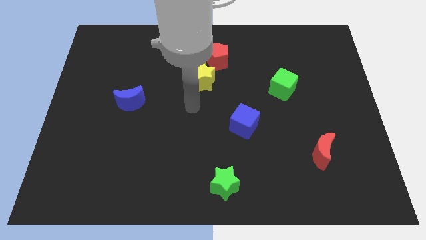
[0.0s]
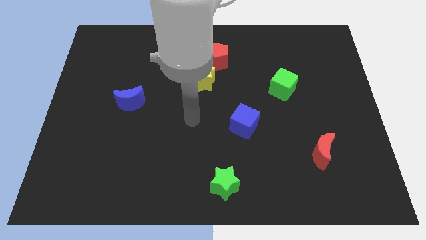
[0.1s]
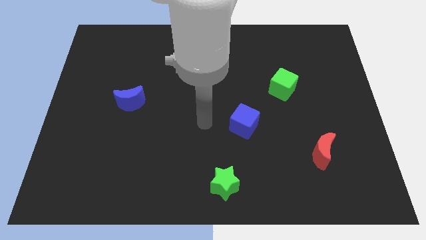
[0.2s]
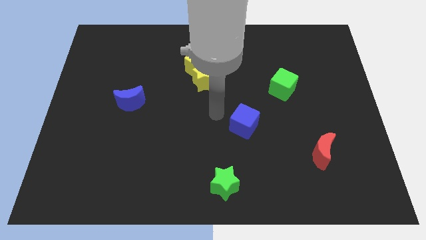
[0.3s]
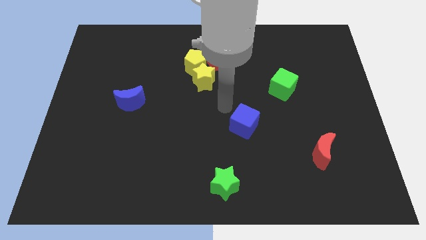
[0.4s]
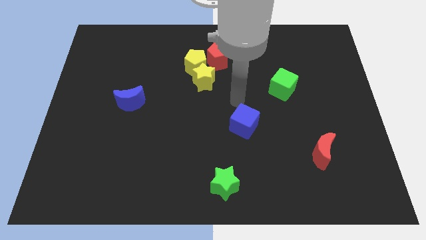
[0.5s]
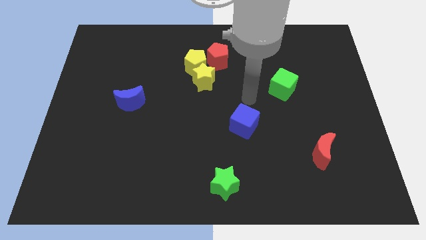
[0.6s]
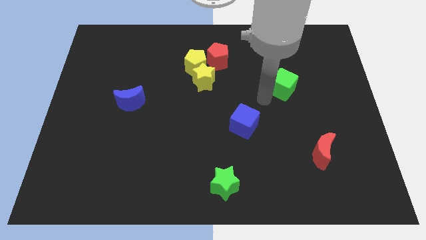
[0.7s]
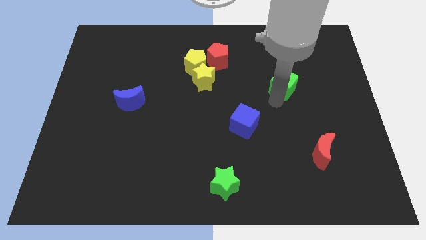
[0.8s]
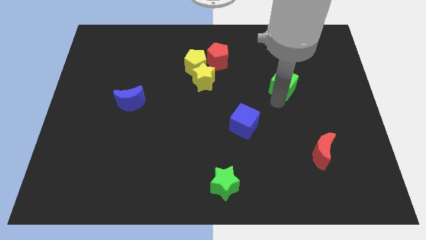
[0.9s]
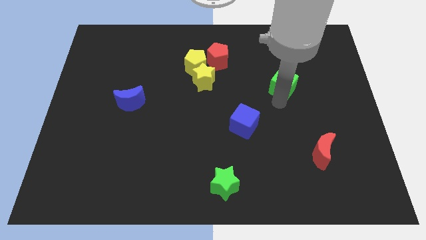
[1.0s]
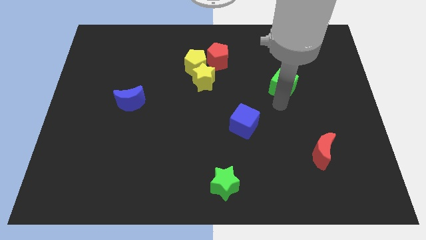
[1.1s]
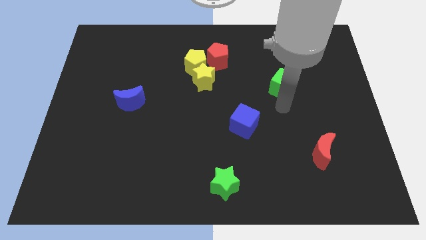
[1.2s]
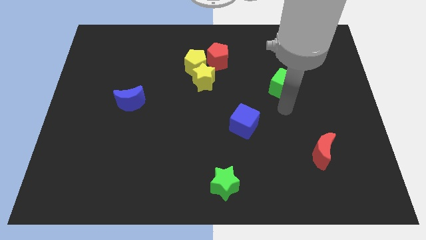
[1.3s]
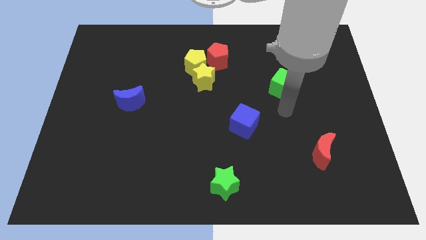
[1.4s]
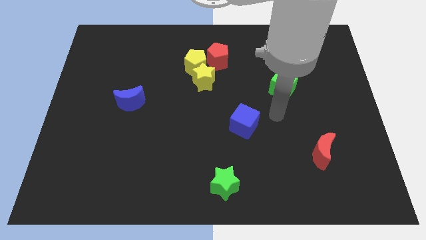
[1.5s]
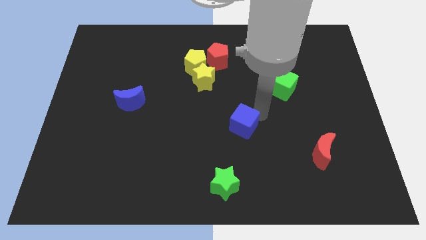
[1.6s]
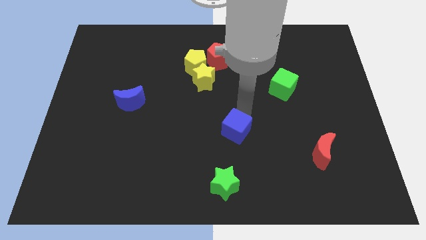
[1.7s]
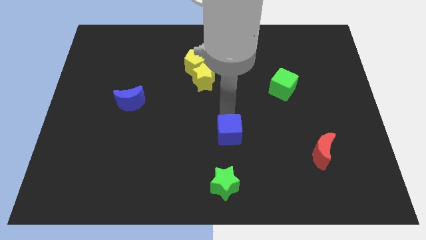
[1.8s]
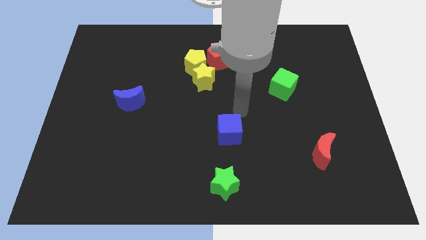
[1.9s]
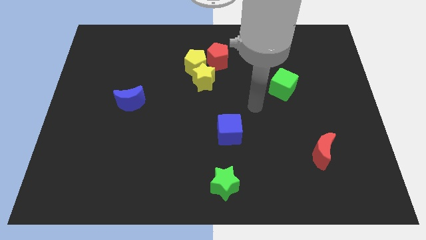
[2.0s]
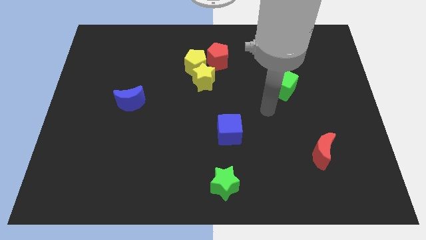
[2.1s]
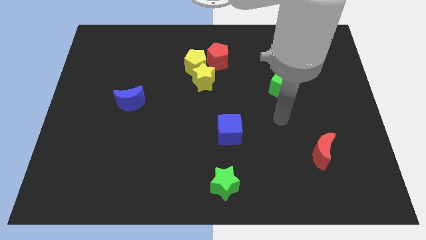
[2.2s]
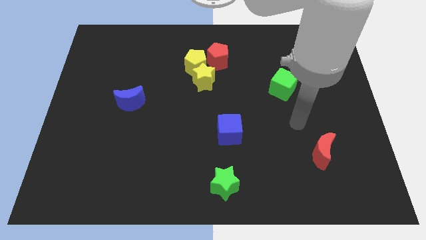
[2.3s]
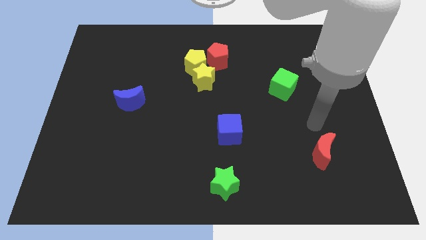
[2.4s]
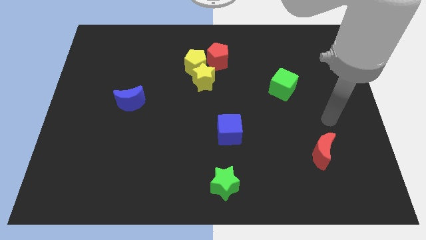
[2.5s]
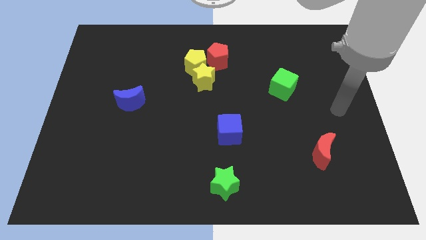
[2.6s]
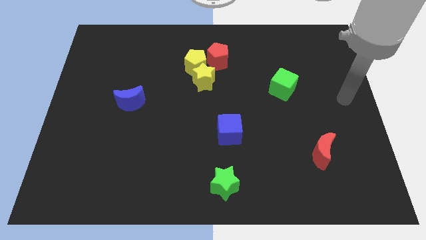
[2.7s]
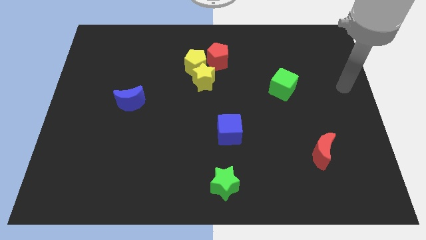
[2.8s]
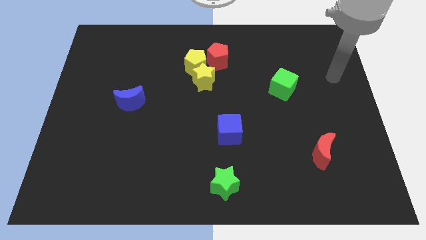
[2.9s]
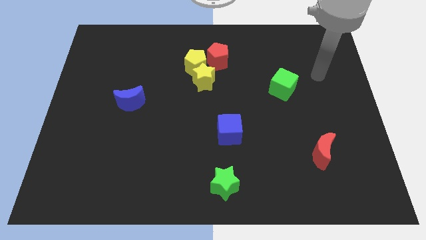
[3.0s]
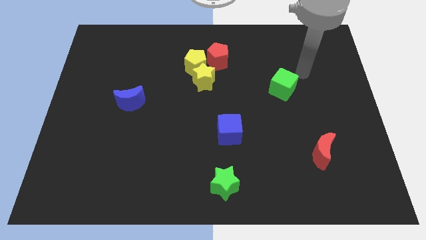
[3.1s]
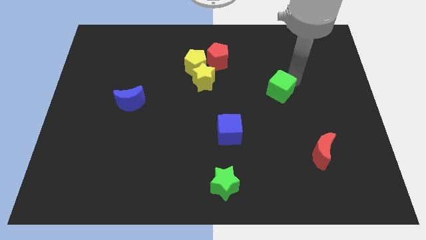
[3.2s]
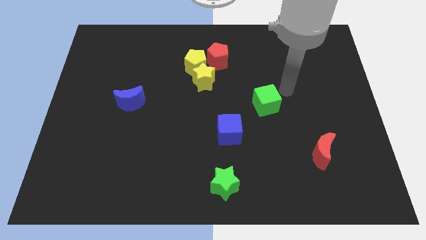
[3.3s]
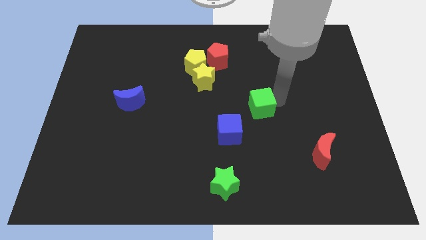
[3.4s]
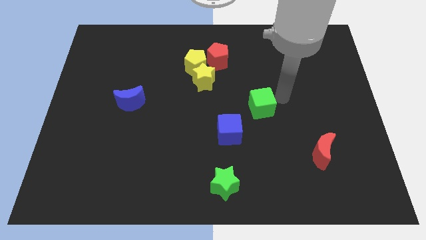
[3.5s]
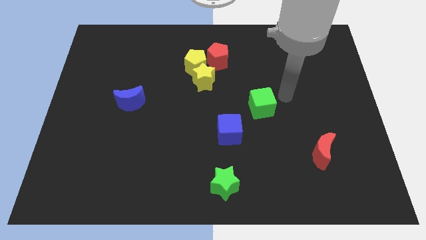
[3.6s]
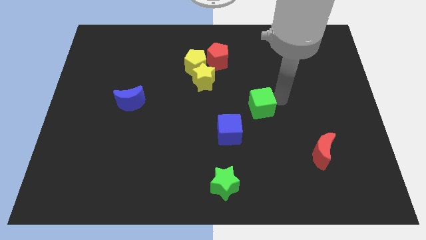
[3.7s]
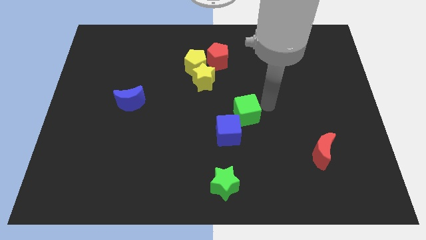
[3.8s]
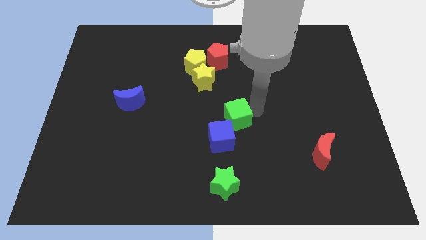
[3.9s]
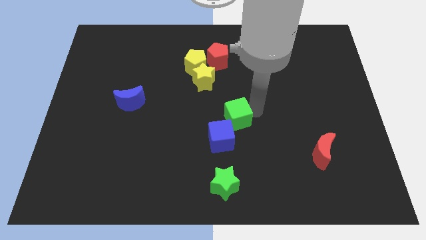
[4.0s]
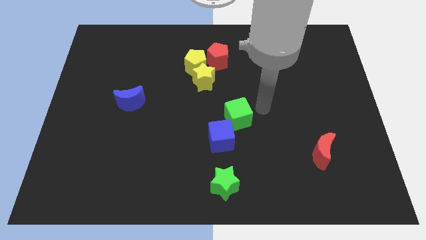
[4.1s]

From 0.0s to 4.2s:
move the green cube top right above the blue cube

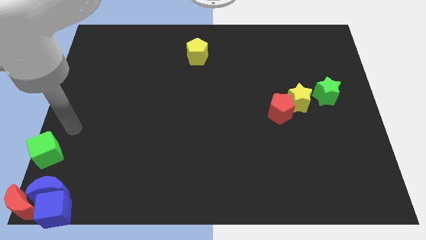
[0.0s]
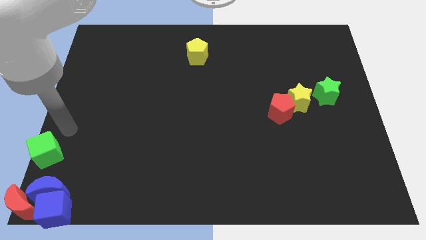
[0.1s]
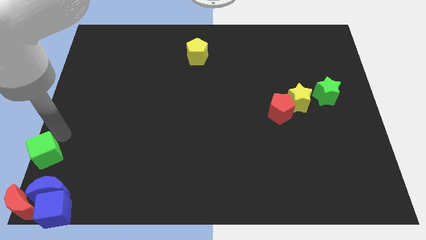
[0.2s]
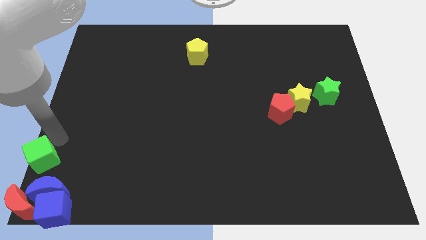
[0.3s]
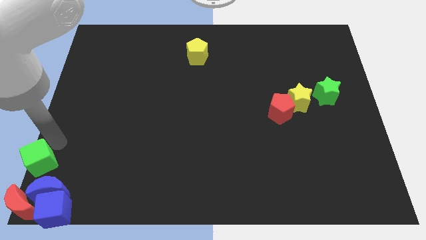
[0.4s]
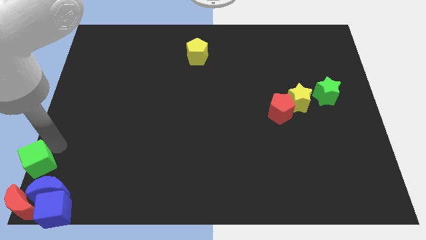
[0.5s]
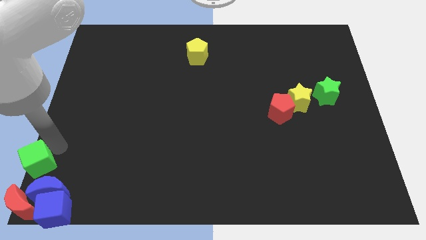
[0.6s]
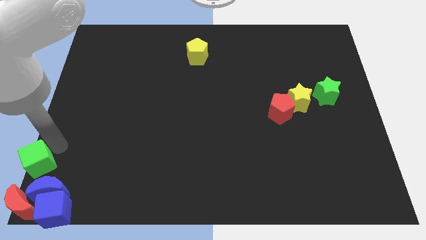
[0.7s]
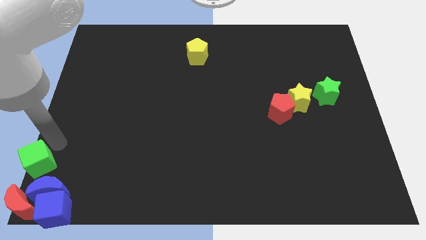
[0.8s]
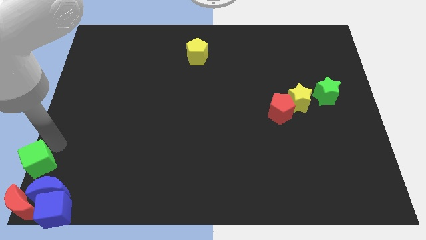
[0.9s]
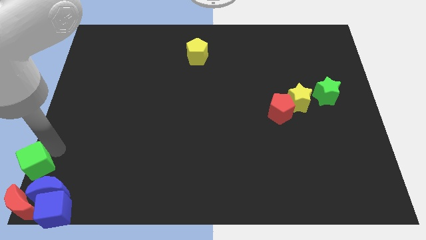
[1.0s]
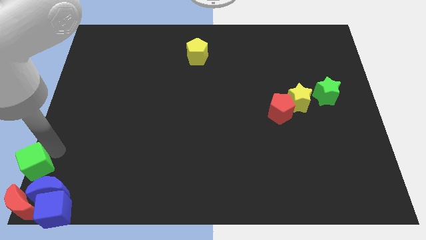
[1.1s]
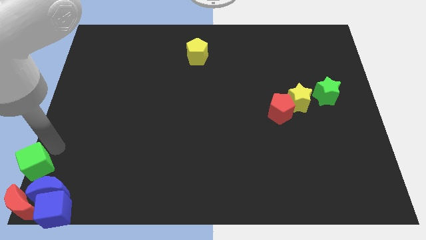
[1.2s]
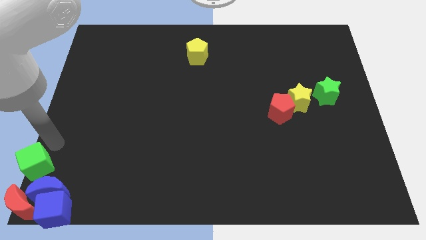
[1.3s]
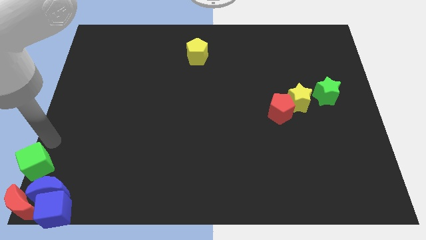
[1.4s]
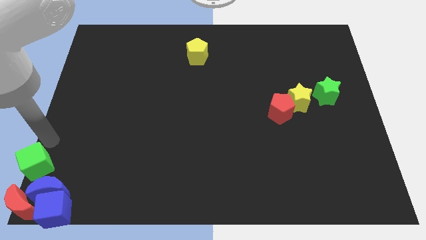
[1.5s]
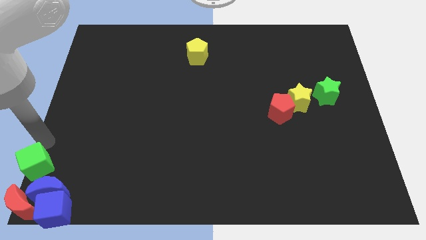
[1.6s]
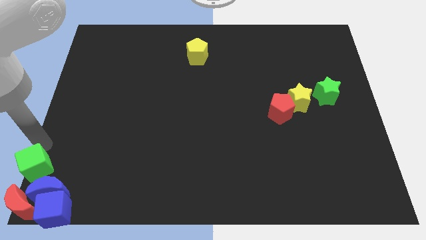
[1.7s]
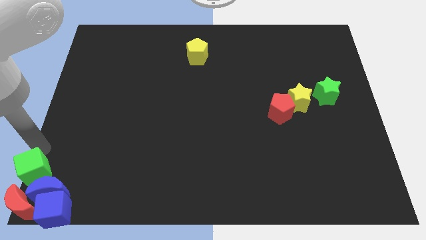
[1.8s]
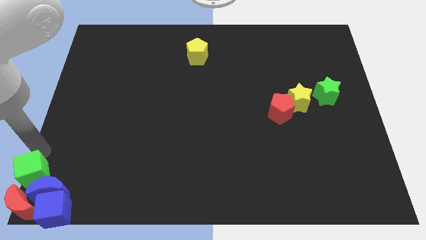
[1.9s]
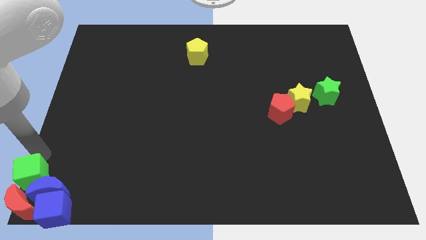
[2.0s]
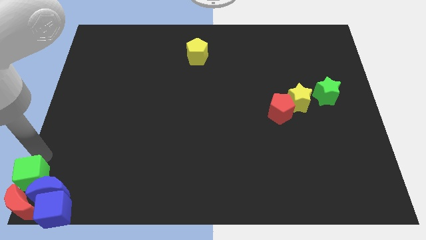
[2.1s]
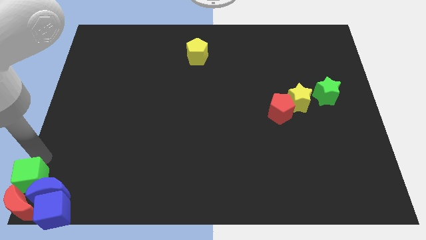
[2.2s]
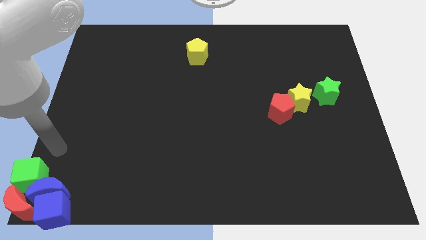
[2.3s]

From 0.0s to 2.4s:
move the green cube into the group of blocks

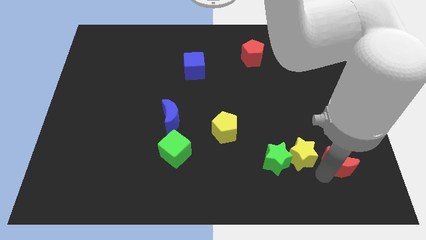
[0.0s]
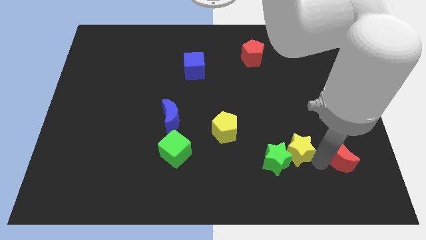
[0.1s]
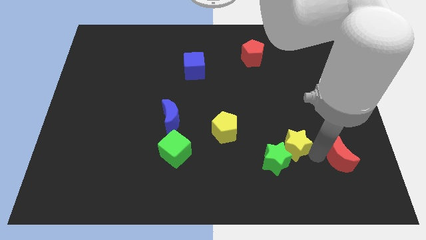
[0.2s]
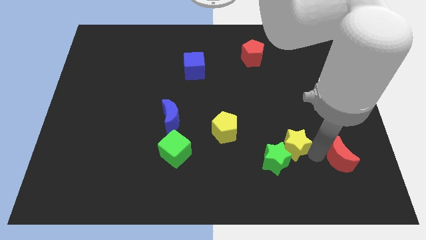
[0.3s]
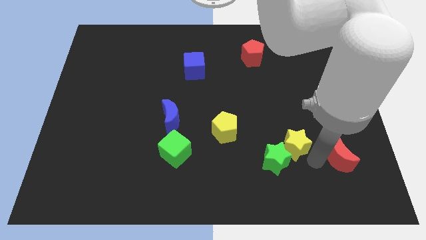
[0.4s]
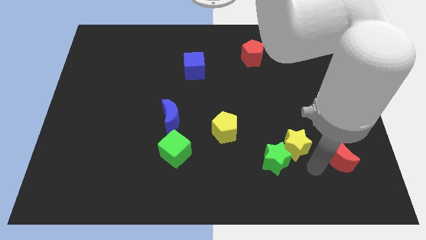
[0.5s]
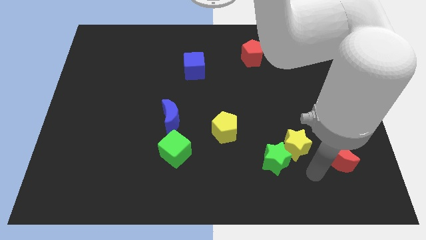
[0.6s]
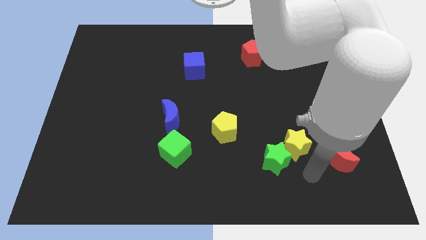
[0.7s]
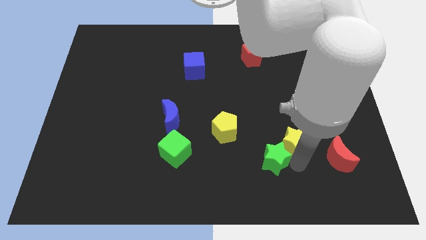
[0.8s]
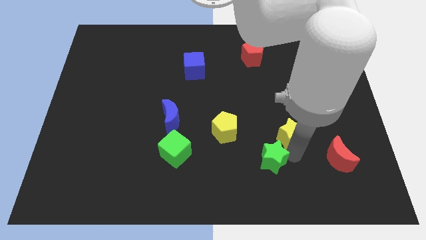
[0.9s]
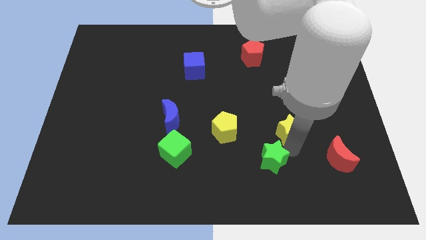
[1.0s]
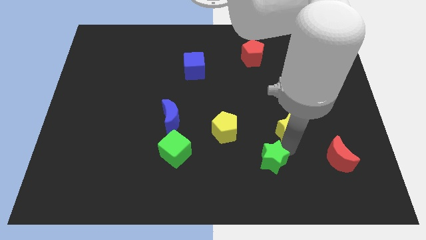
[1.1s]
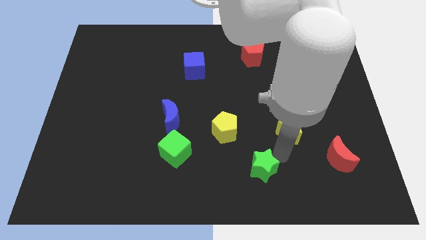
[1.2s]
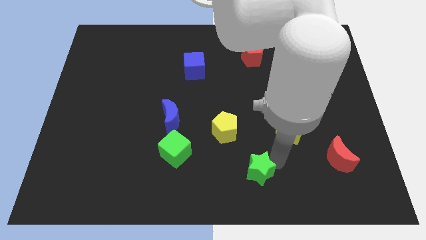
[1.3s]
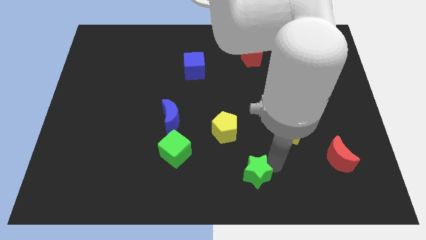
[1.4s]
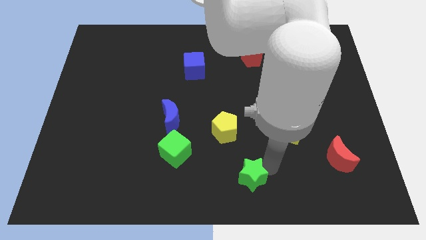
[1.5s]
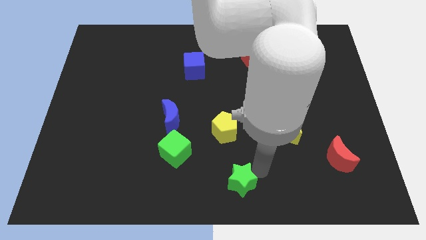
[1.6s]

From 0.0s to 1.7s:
separate green star and the yellow star

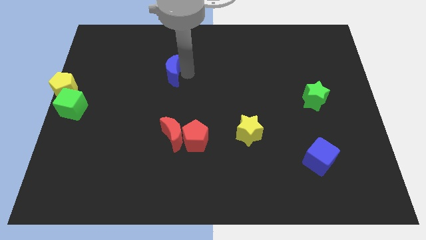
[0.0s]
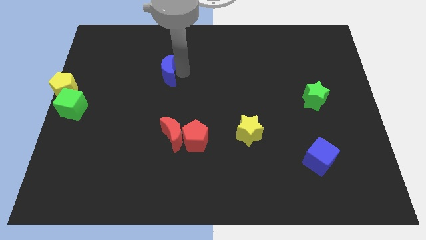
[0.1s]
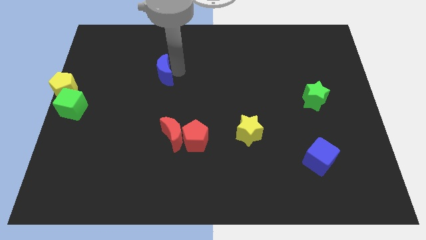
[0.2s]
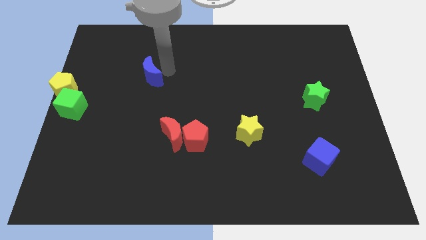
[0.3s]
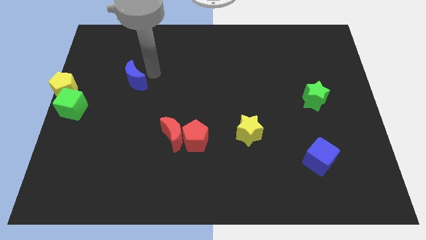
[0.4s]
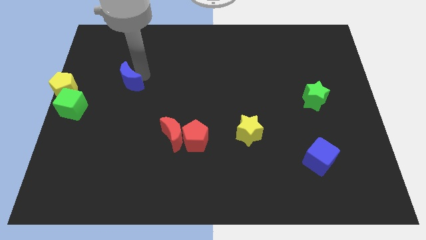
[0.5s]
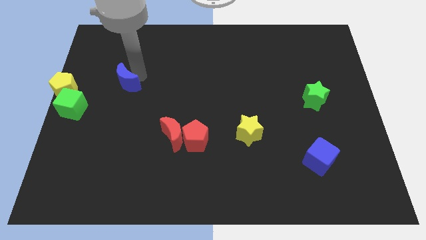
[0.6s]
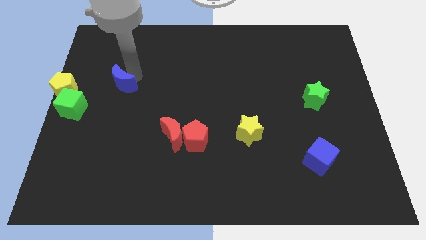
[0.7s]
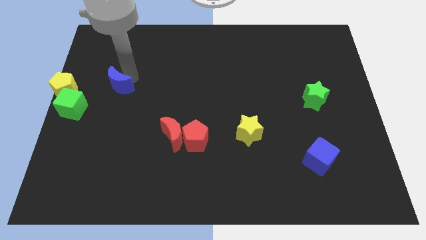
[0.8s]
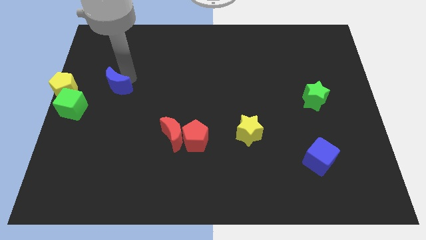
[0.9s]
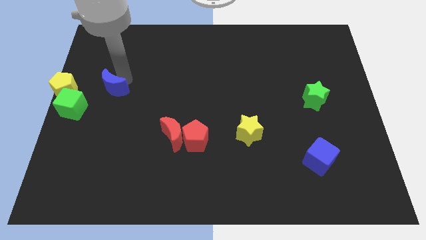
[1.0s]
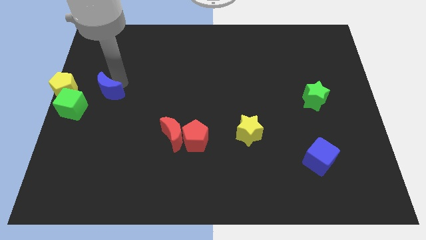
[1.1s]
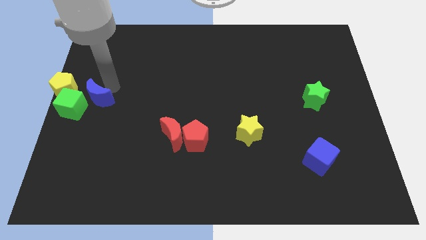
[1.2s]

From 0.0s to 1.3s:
push the blue crescent to the right of the yellow pentagon
